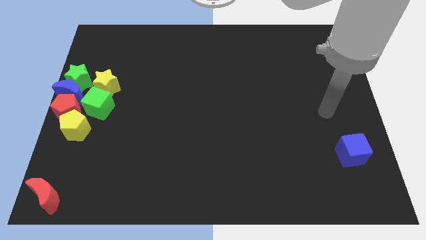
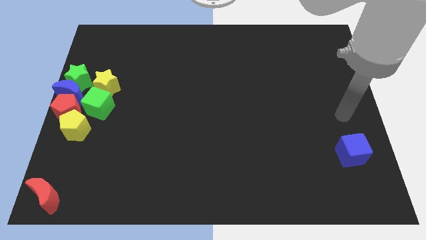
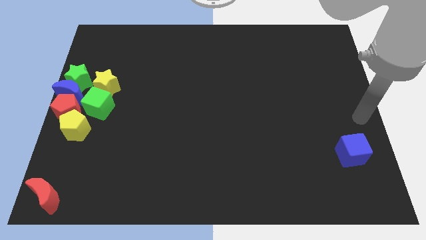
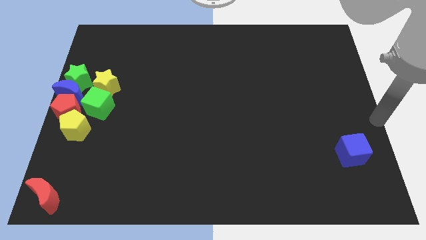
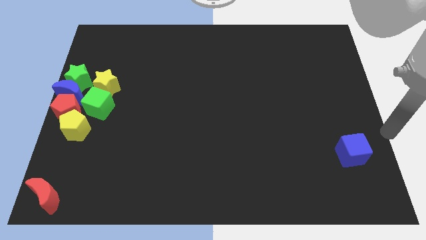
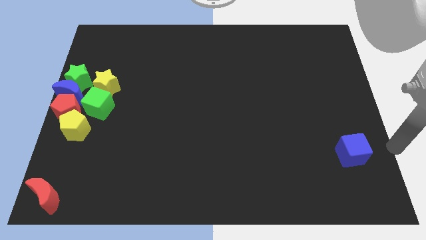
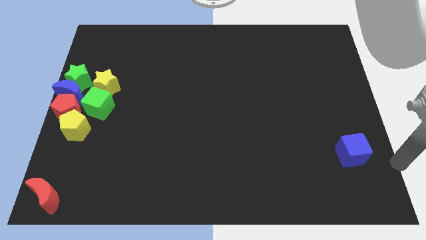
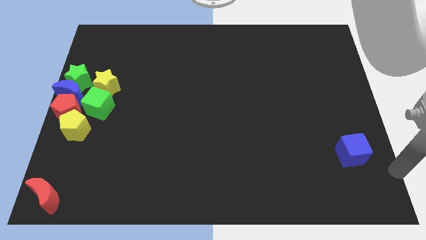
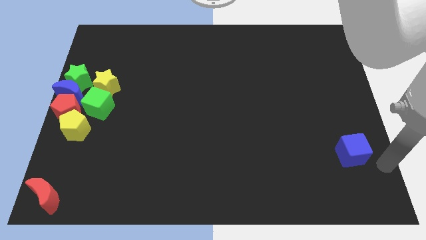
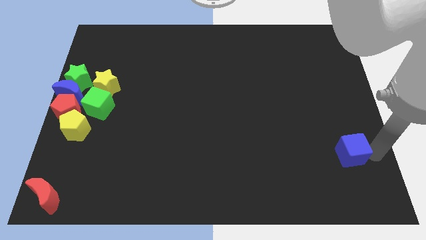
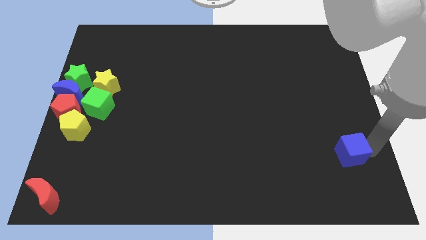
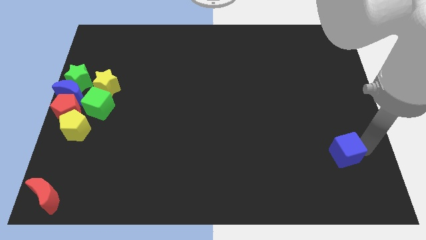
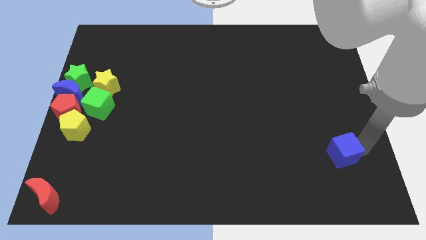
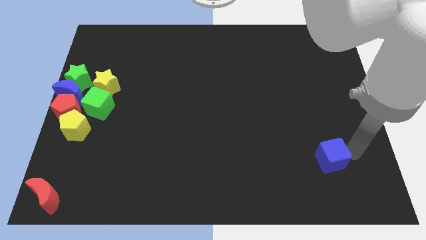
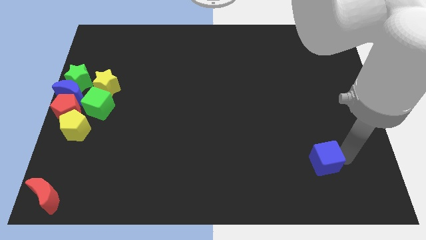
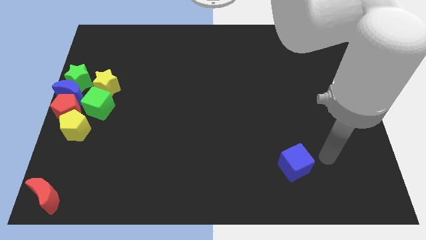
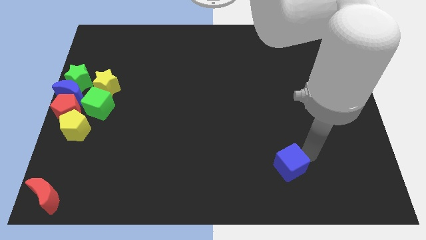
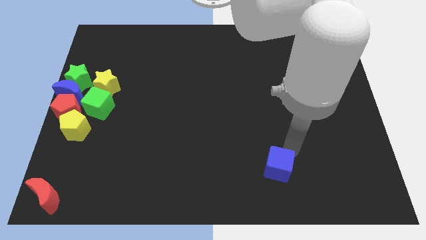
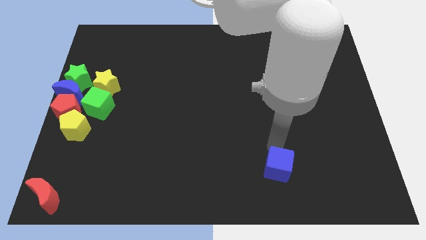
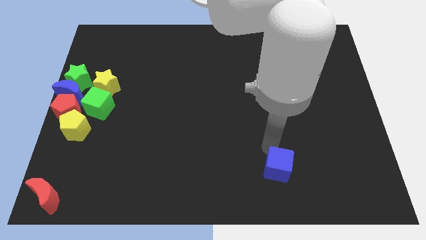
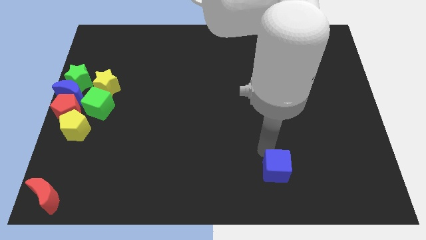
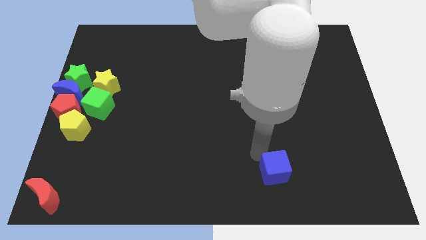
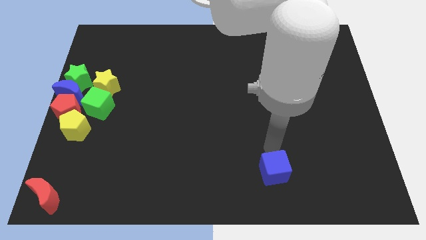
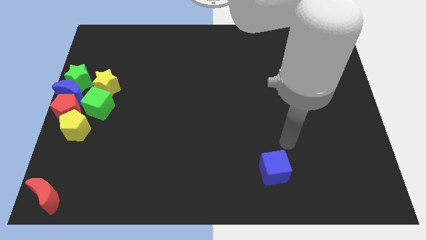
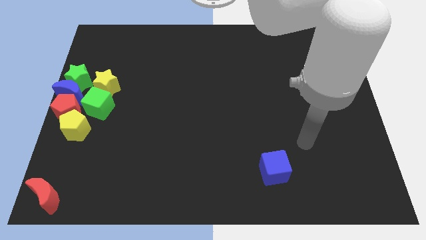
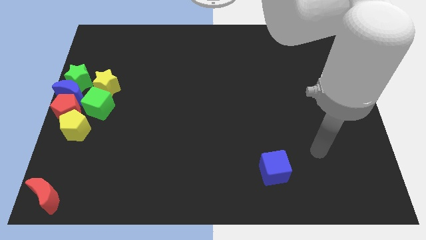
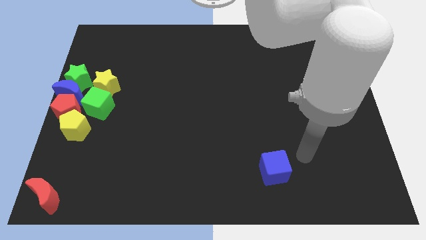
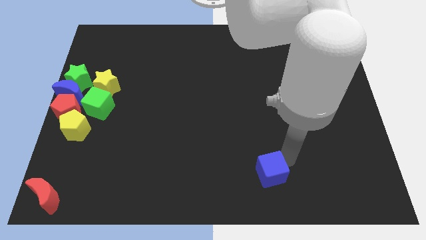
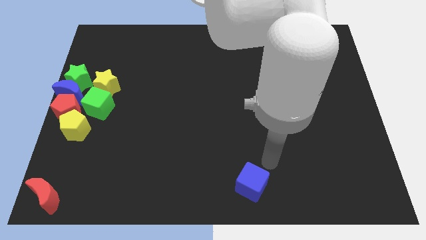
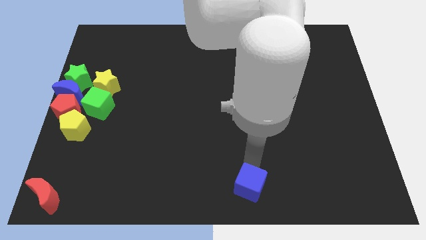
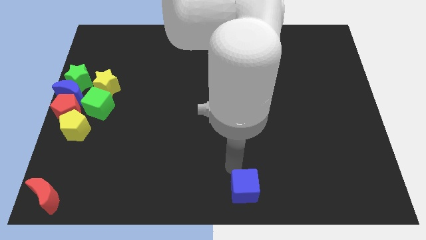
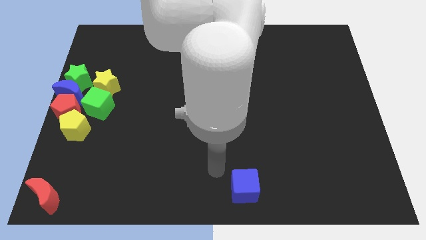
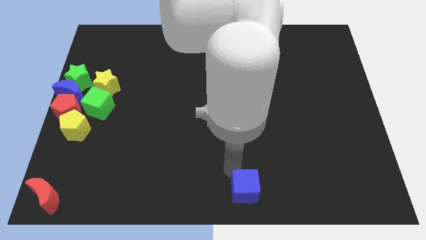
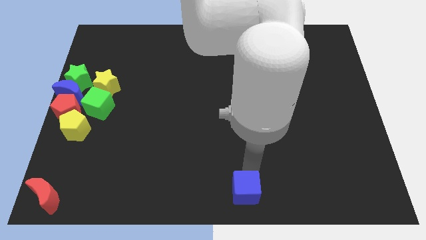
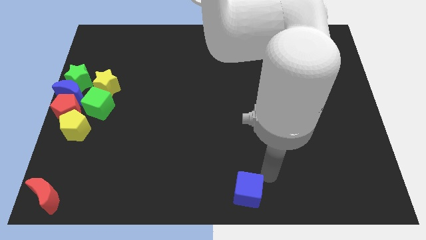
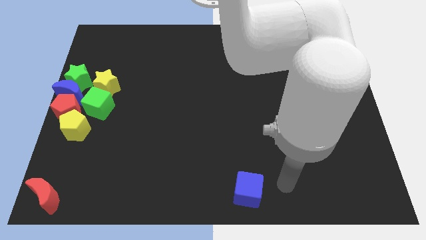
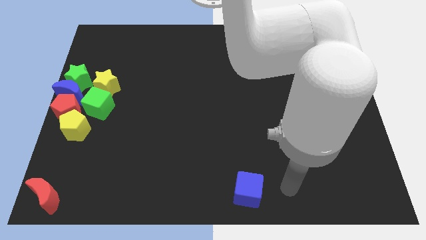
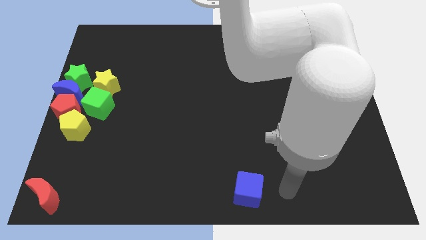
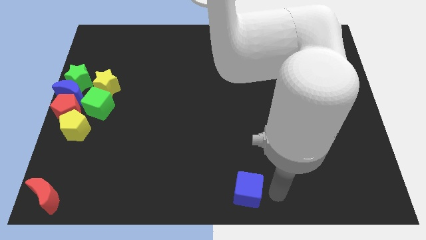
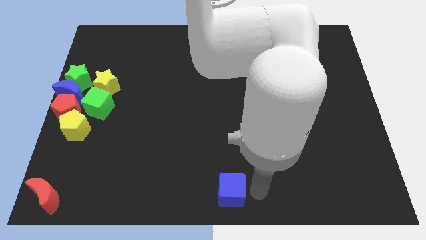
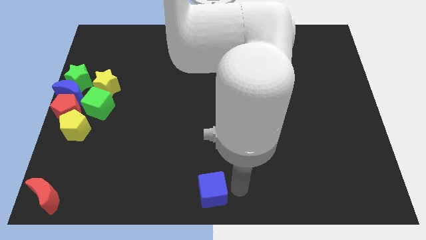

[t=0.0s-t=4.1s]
push the blue cube towards the left bottom center

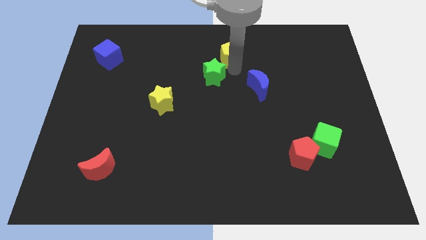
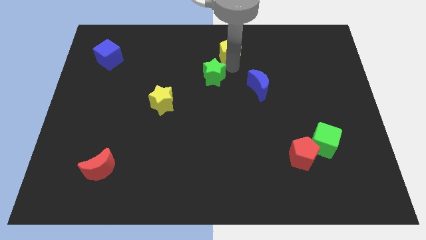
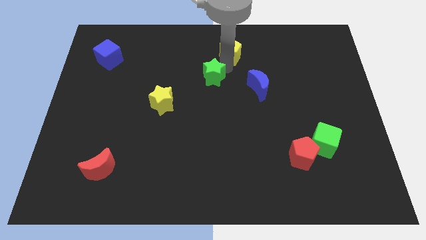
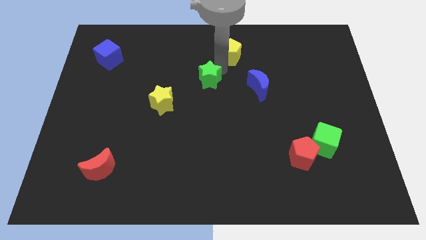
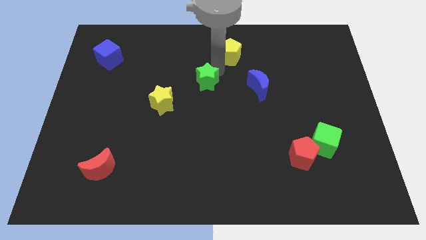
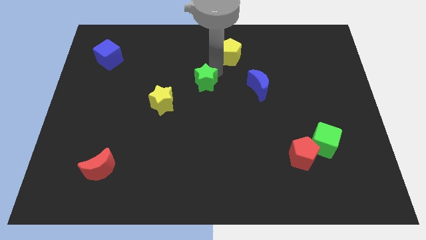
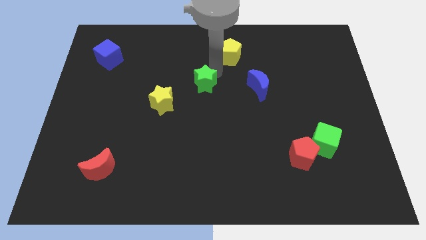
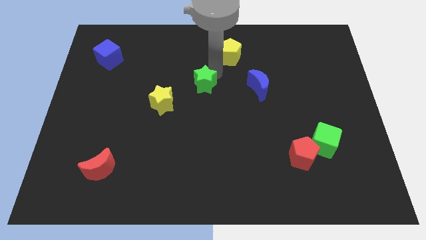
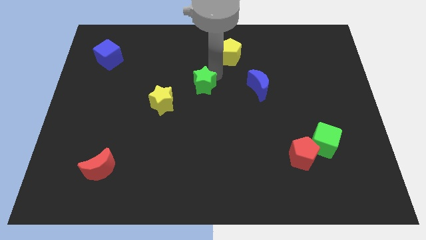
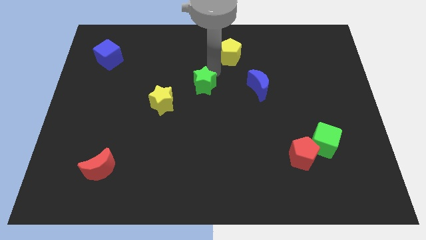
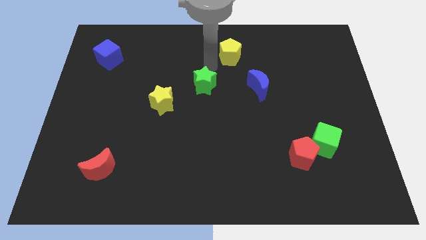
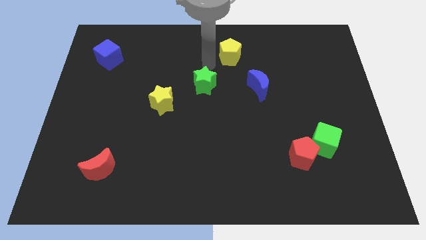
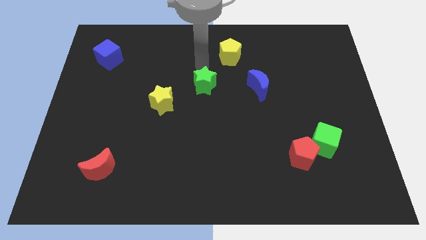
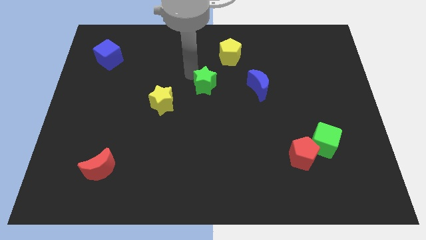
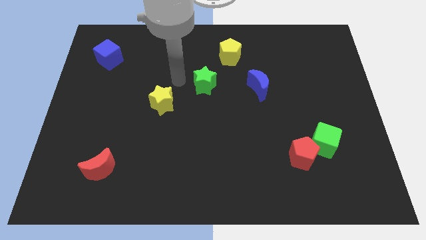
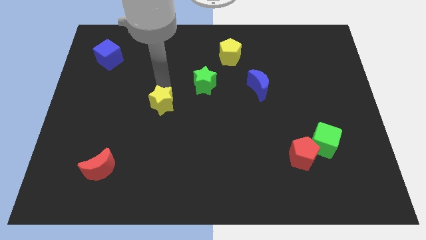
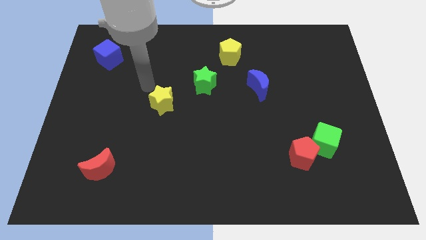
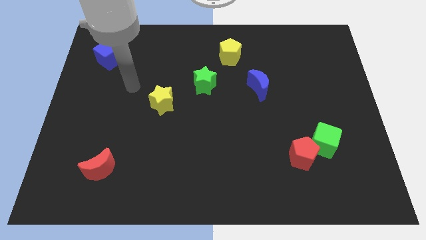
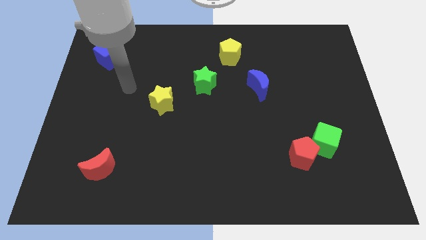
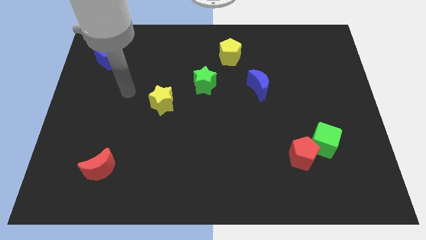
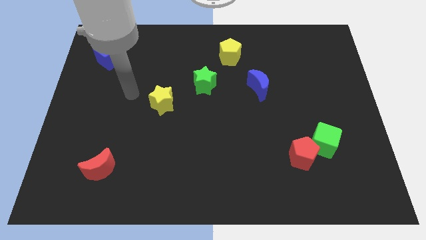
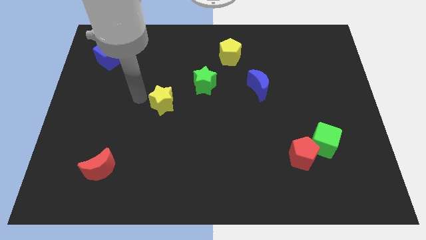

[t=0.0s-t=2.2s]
move the green star slightly downwards

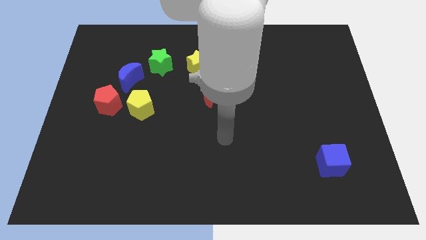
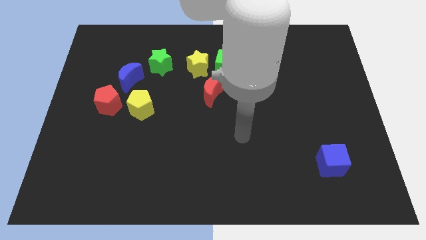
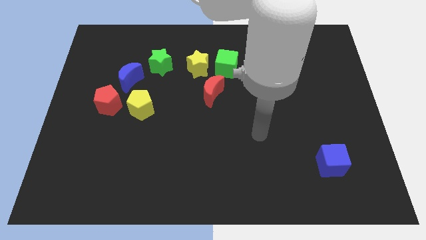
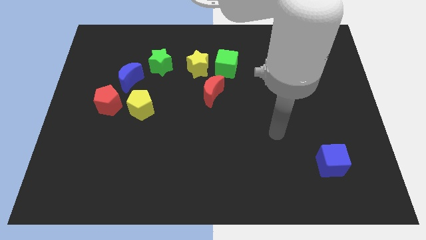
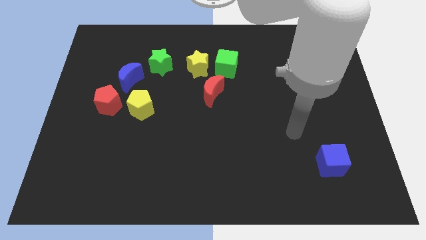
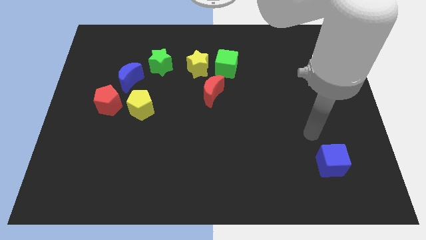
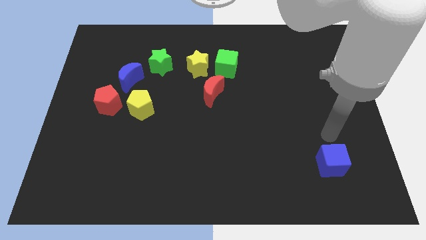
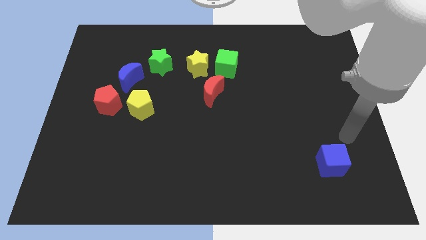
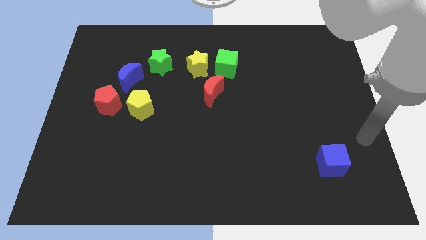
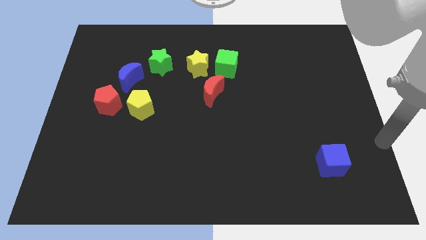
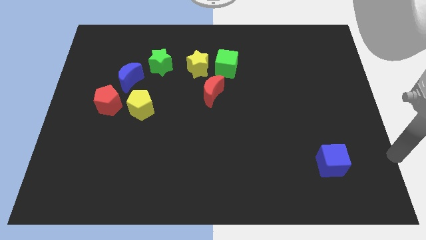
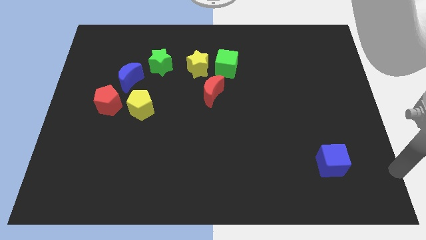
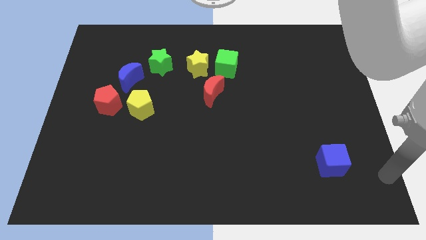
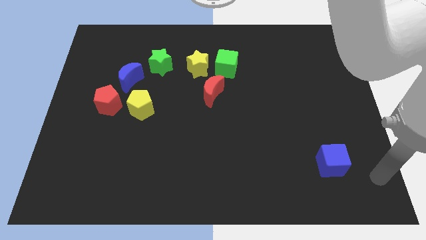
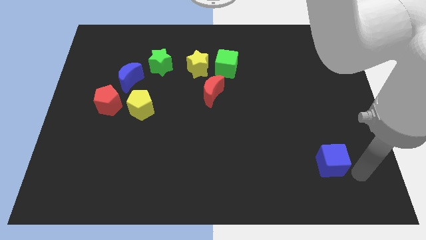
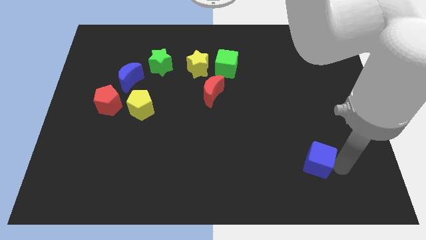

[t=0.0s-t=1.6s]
place the arm diagonally to the blue cube

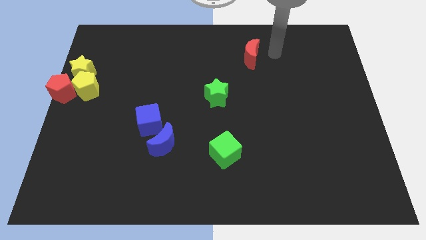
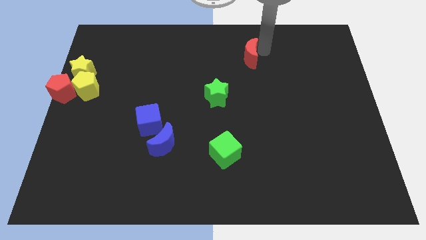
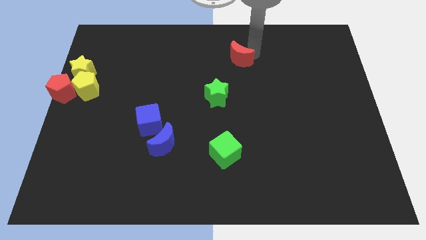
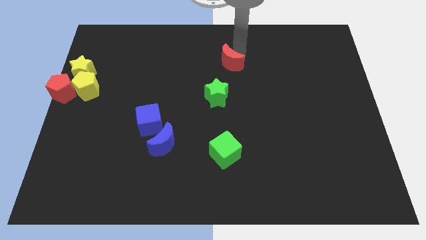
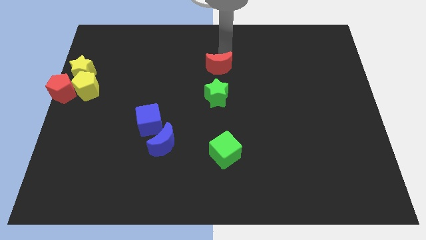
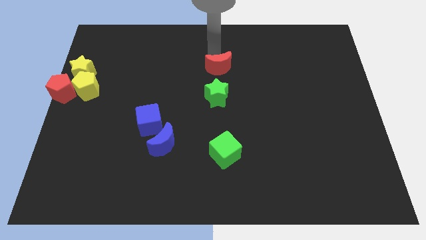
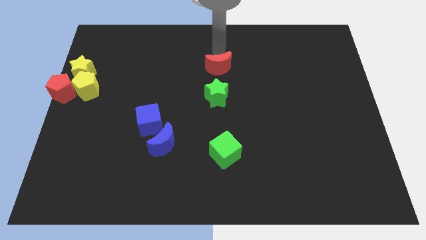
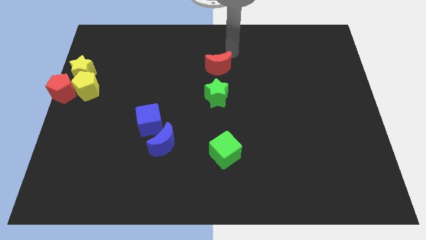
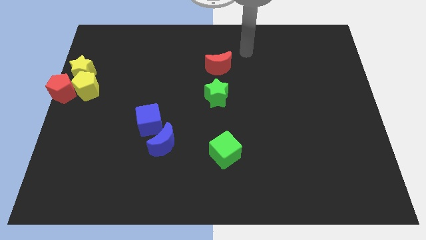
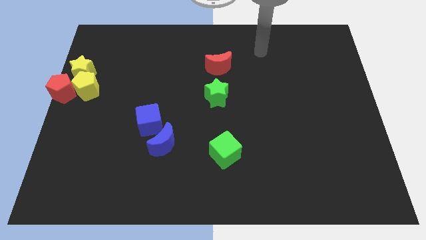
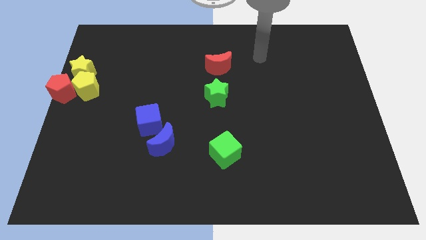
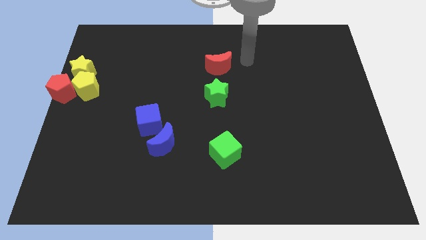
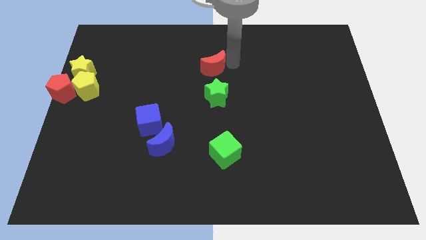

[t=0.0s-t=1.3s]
drag the red moon to the top side of the green star
